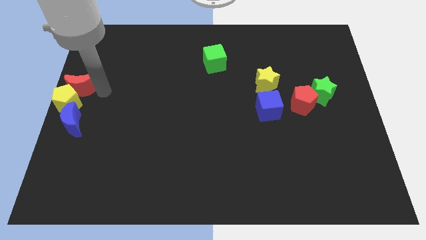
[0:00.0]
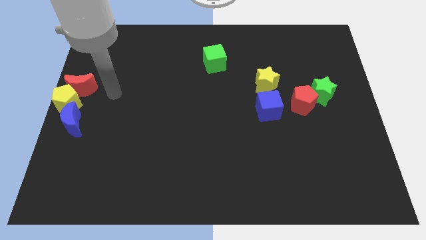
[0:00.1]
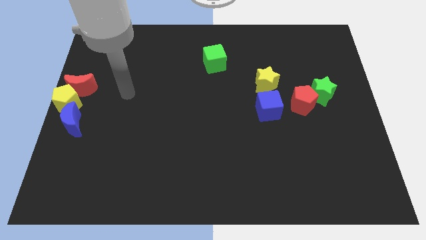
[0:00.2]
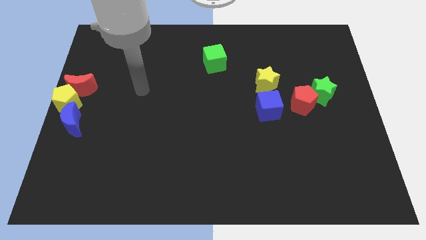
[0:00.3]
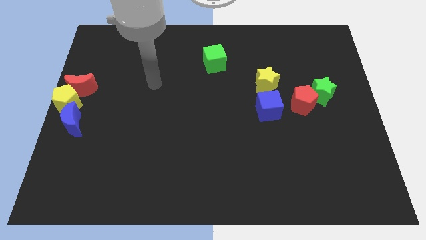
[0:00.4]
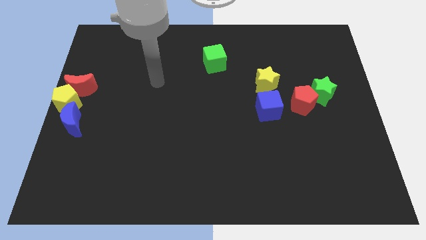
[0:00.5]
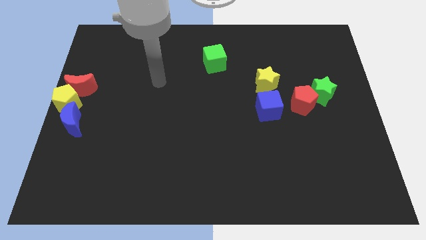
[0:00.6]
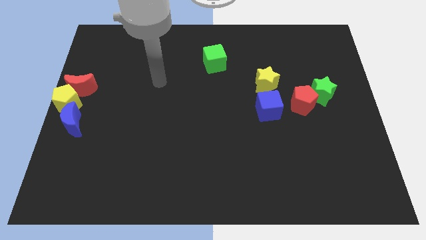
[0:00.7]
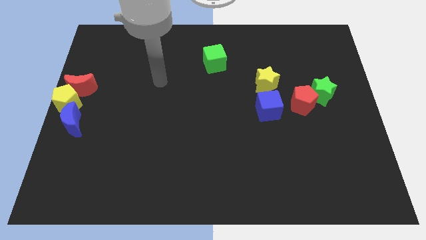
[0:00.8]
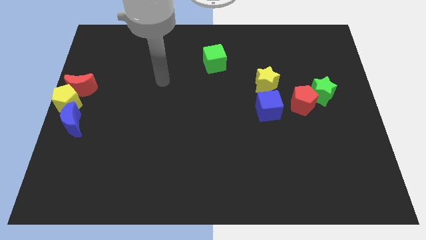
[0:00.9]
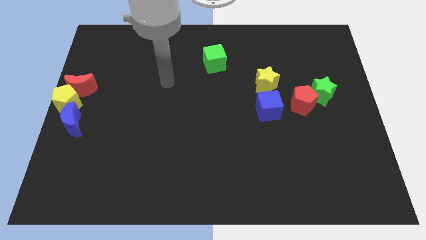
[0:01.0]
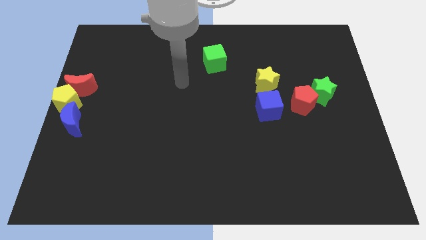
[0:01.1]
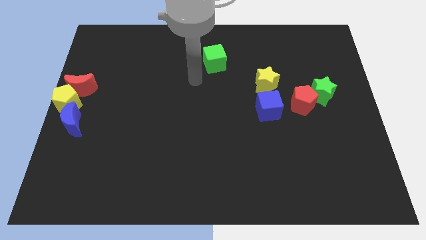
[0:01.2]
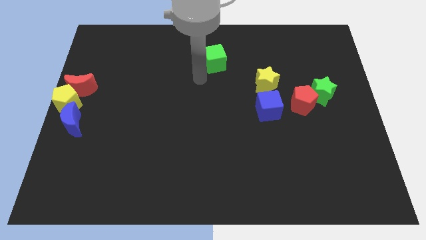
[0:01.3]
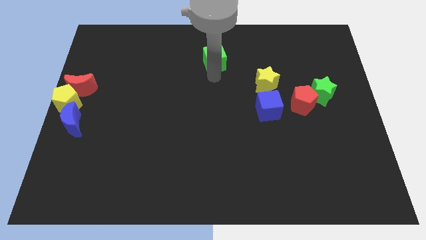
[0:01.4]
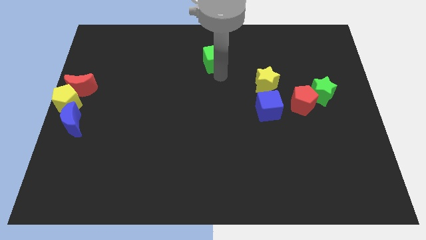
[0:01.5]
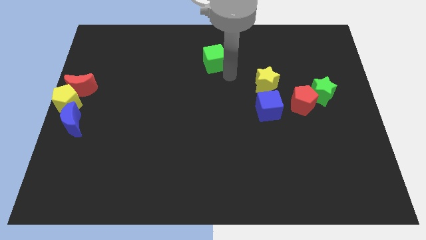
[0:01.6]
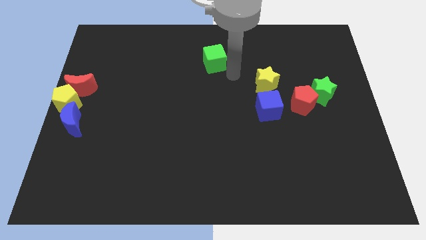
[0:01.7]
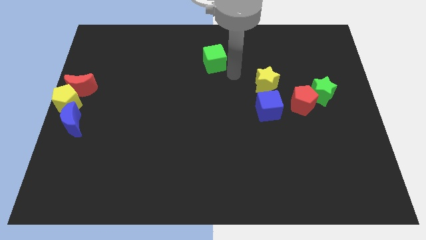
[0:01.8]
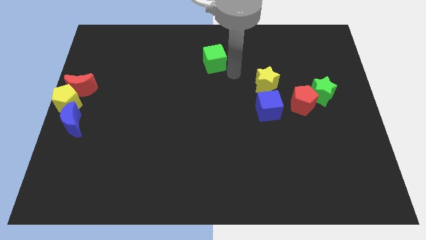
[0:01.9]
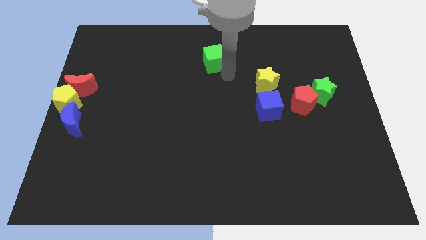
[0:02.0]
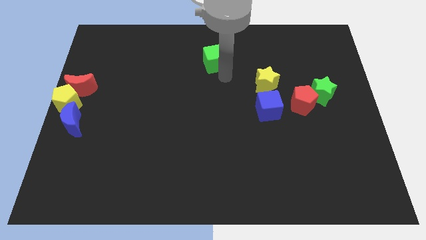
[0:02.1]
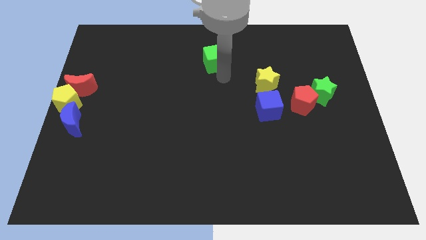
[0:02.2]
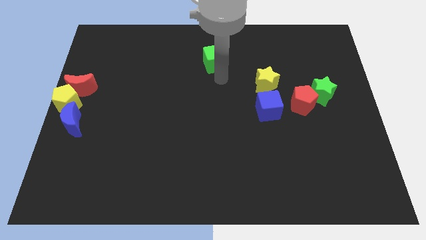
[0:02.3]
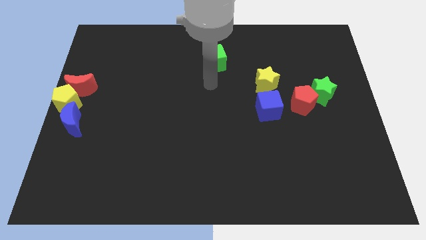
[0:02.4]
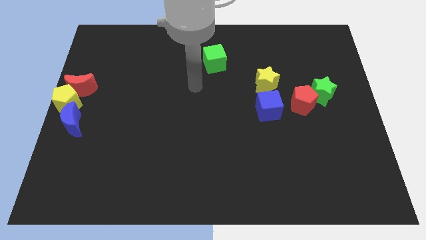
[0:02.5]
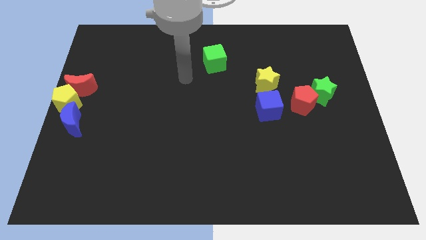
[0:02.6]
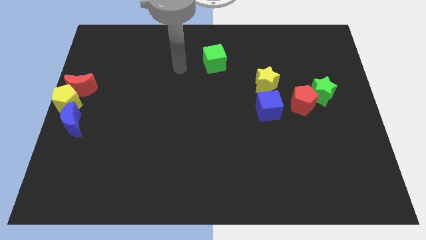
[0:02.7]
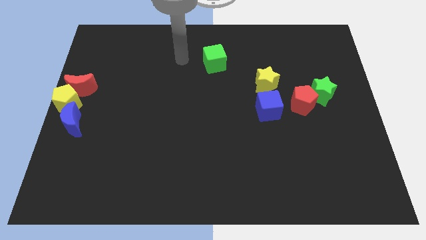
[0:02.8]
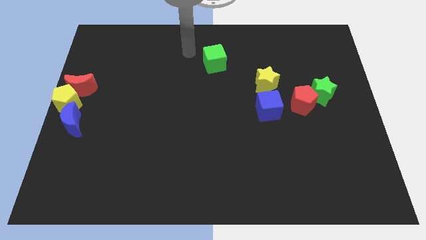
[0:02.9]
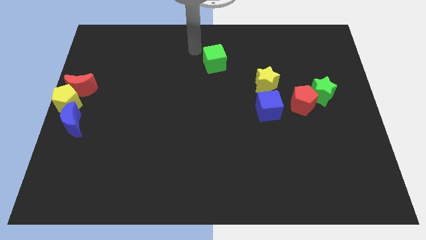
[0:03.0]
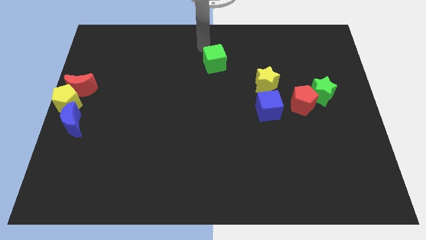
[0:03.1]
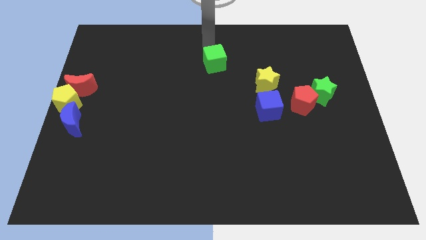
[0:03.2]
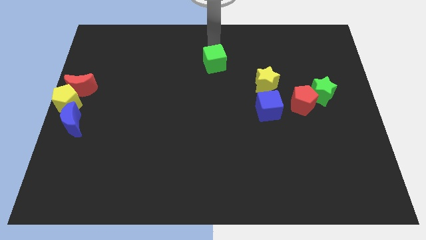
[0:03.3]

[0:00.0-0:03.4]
place your hand above the green cube

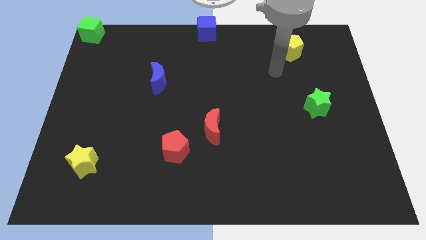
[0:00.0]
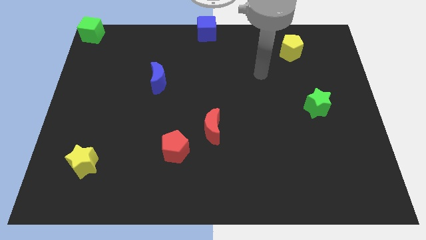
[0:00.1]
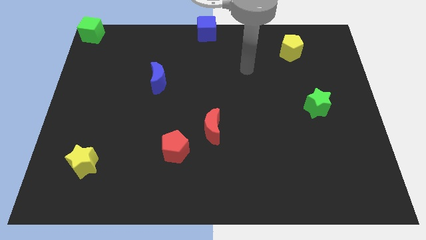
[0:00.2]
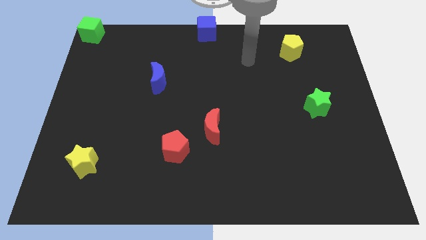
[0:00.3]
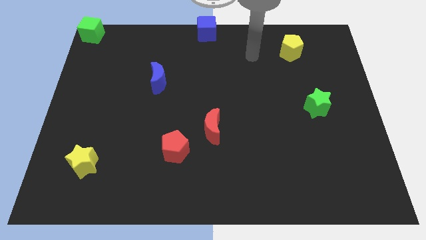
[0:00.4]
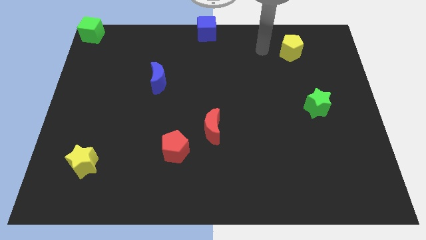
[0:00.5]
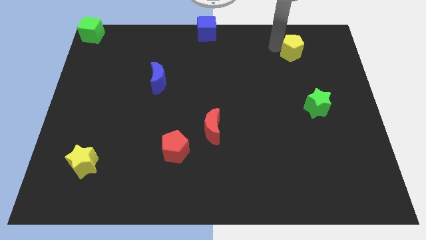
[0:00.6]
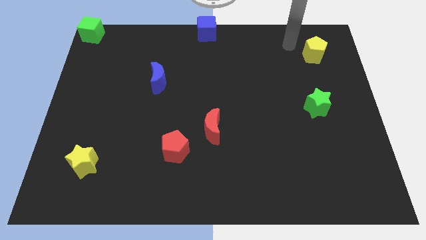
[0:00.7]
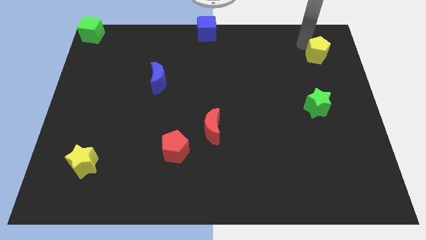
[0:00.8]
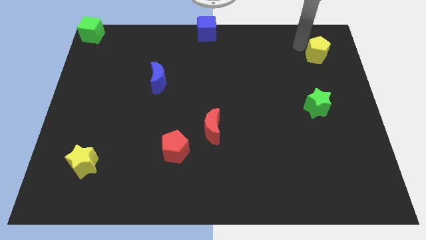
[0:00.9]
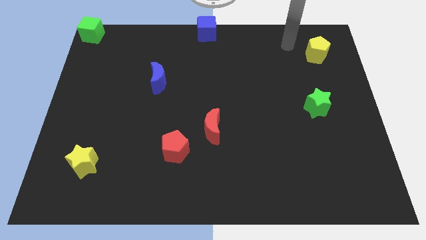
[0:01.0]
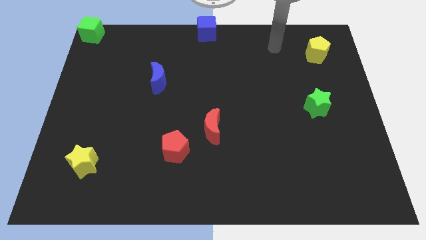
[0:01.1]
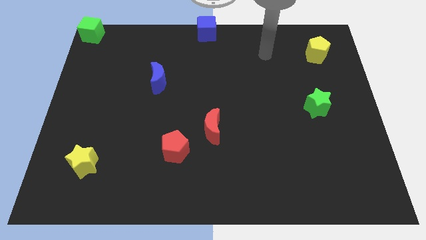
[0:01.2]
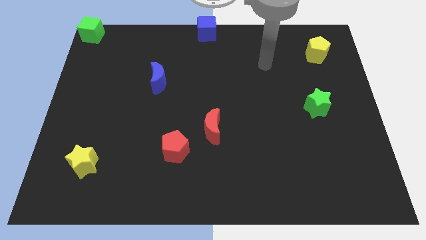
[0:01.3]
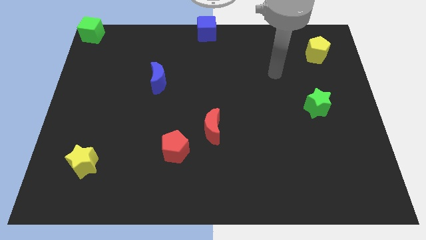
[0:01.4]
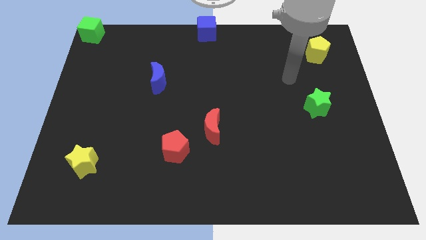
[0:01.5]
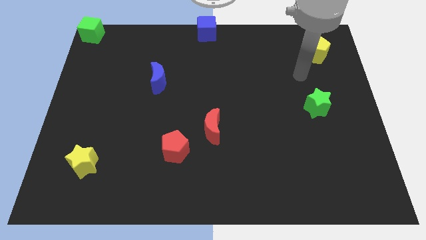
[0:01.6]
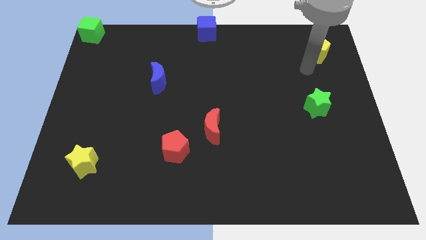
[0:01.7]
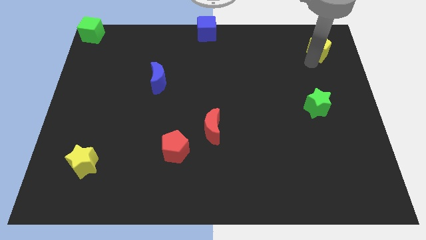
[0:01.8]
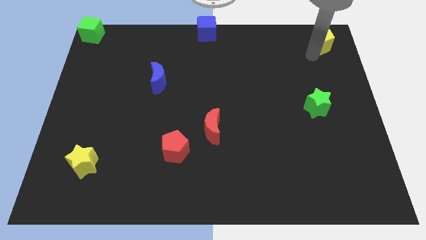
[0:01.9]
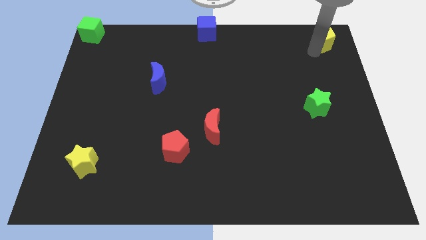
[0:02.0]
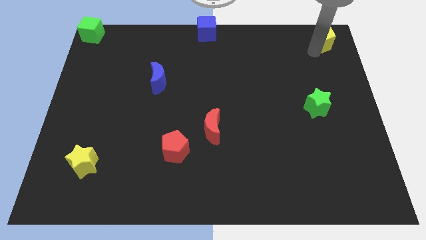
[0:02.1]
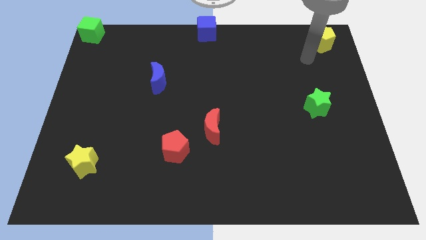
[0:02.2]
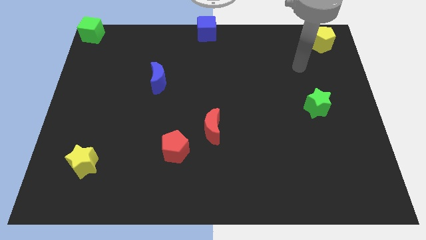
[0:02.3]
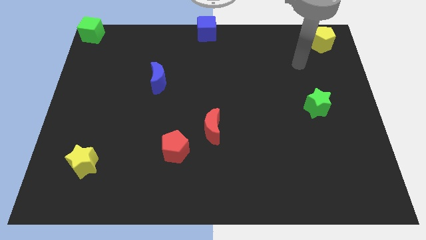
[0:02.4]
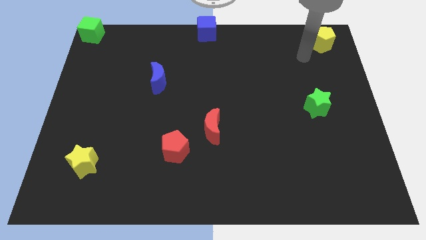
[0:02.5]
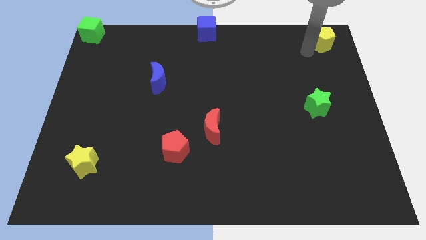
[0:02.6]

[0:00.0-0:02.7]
place the yellow pentagon at top right side of the board

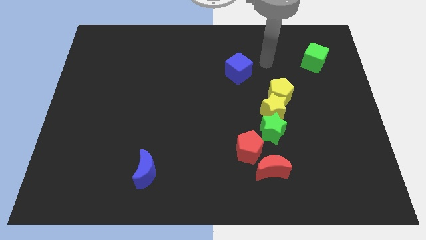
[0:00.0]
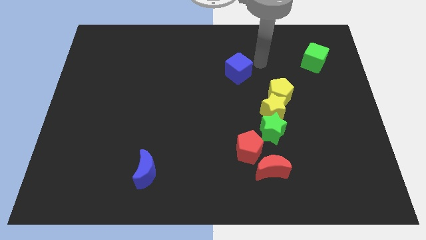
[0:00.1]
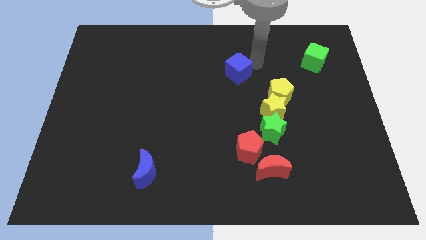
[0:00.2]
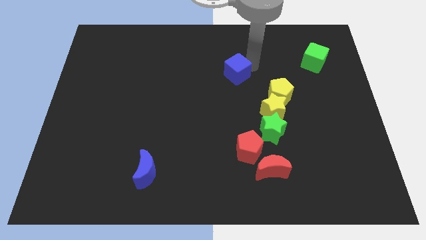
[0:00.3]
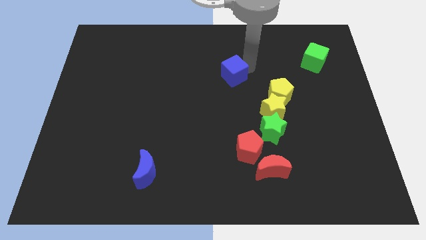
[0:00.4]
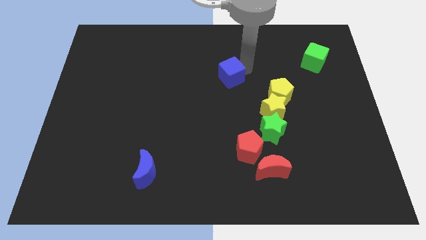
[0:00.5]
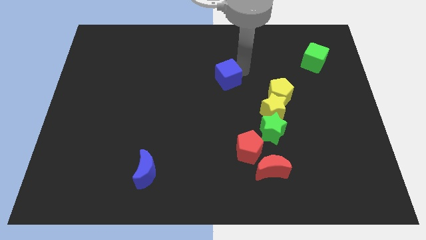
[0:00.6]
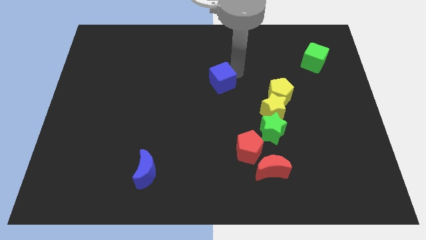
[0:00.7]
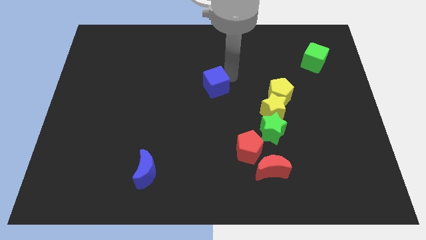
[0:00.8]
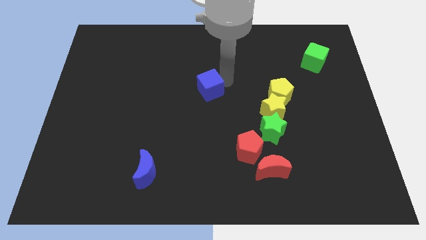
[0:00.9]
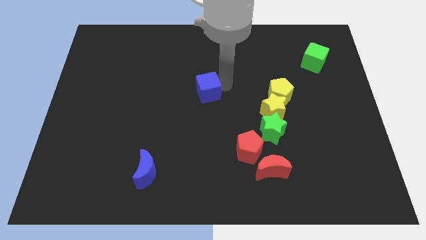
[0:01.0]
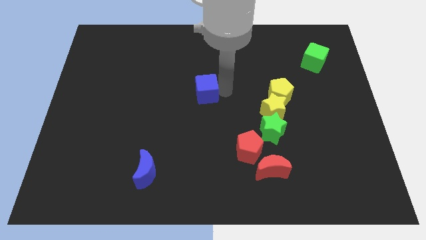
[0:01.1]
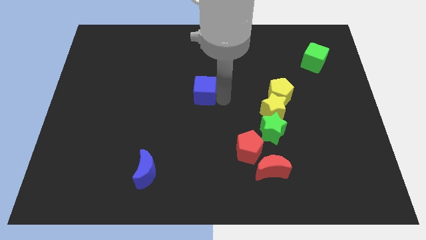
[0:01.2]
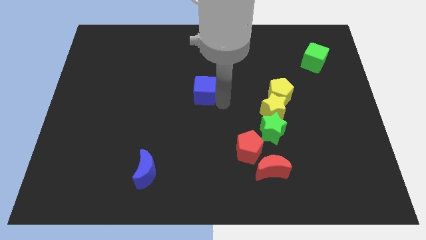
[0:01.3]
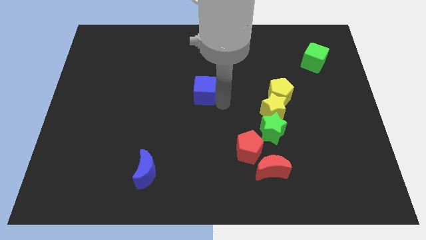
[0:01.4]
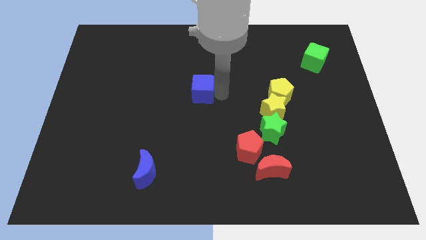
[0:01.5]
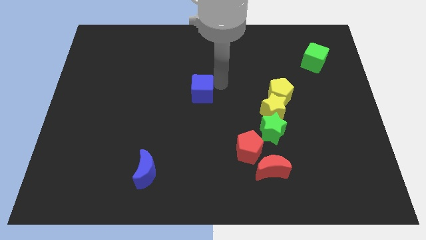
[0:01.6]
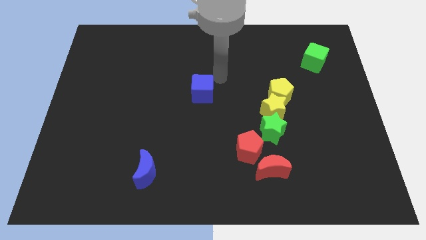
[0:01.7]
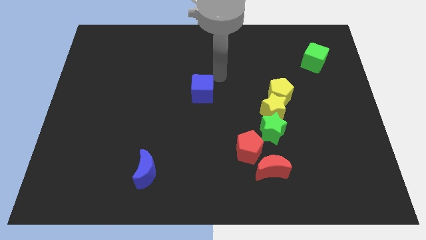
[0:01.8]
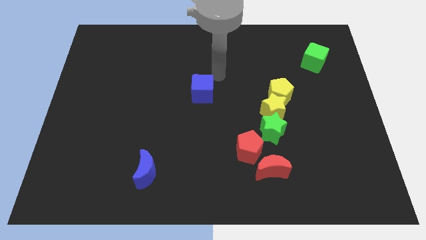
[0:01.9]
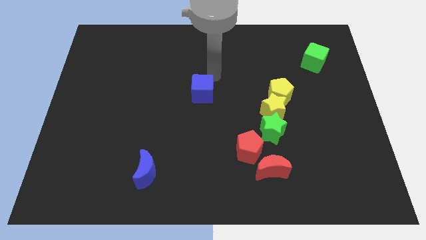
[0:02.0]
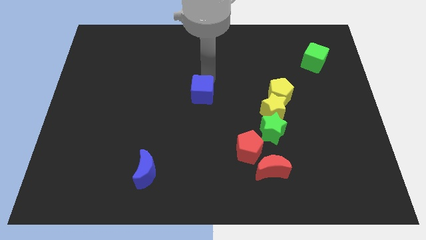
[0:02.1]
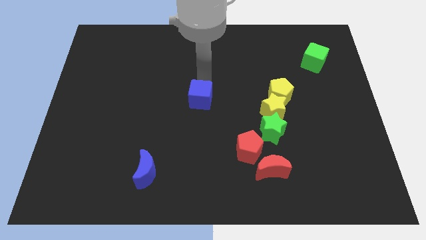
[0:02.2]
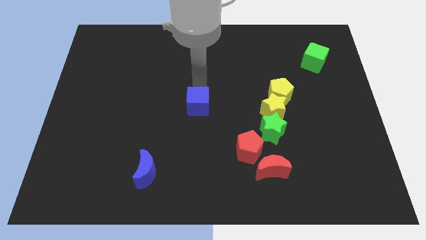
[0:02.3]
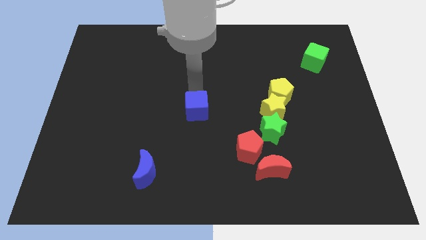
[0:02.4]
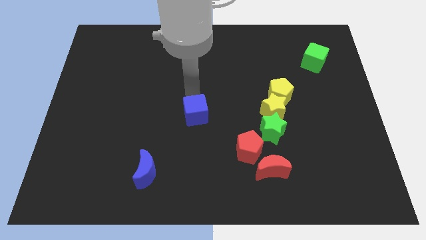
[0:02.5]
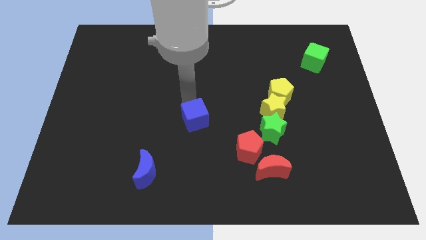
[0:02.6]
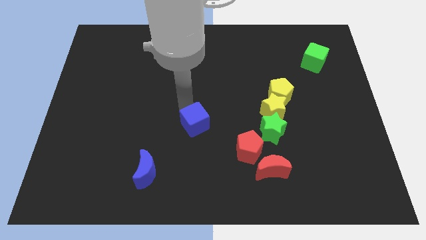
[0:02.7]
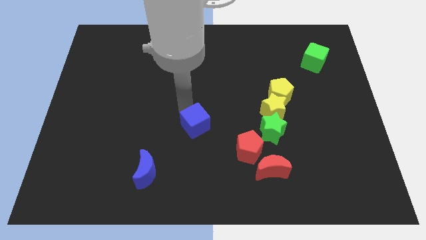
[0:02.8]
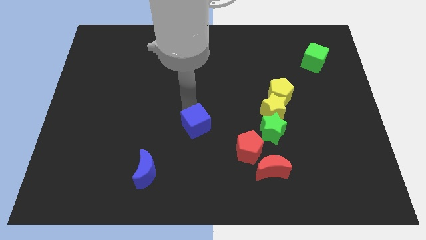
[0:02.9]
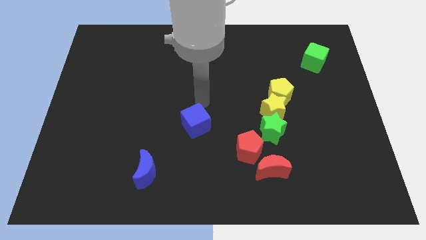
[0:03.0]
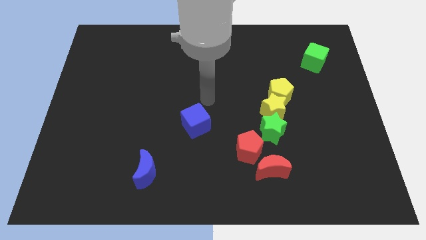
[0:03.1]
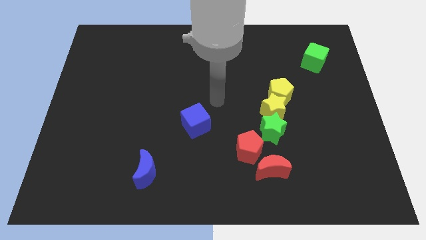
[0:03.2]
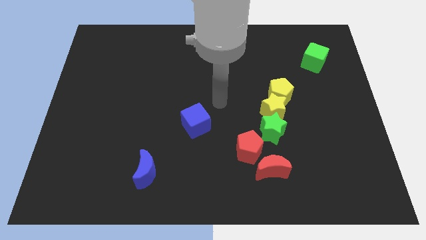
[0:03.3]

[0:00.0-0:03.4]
place the blue cube to the left of the green star
